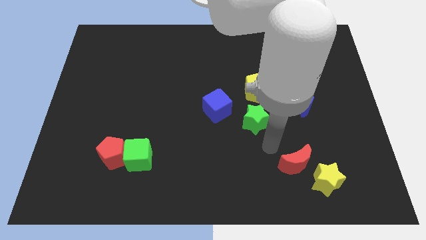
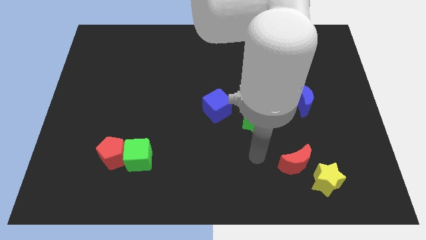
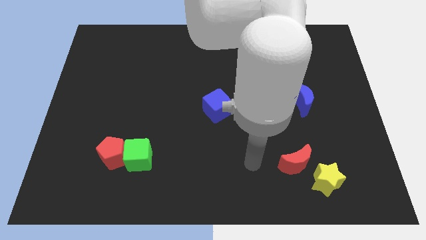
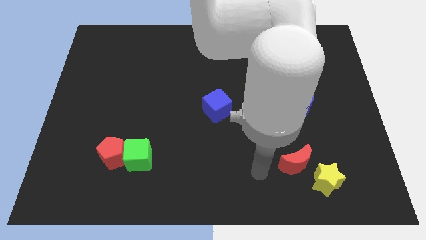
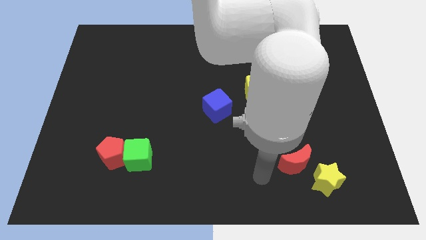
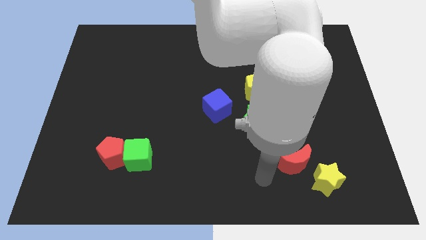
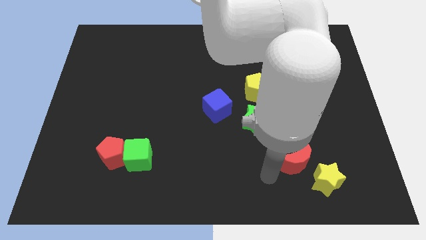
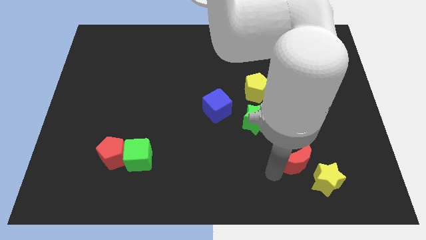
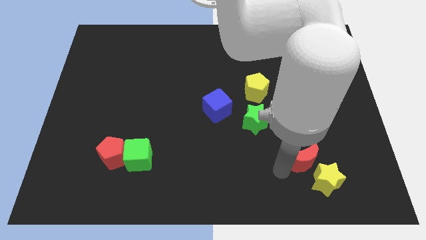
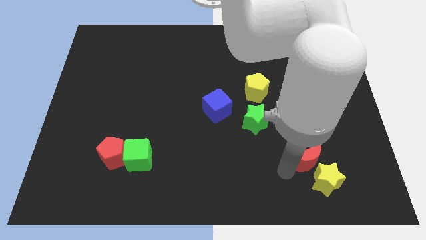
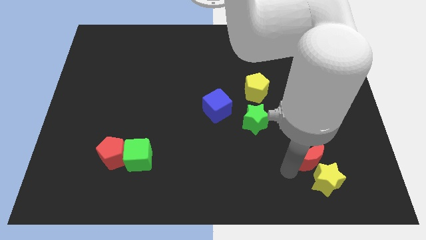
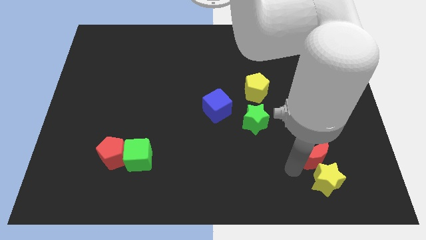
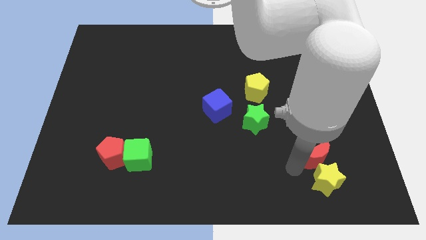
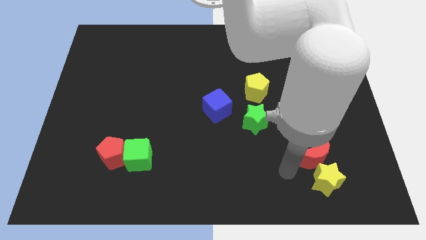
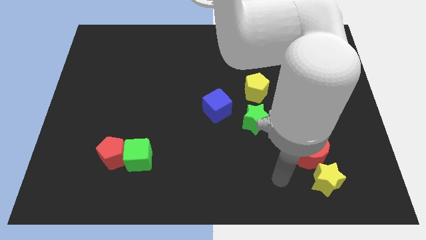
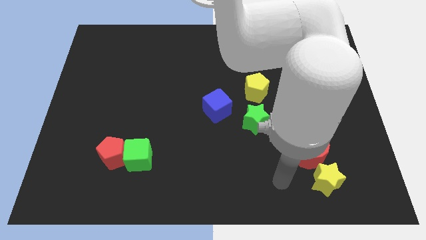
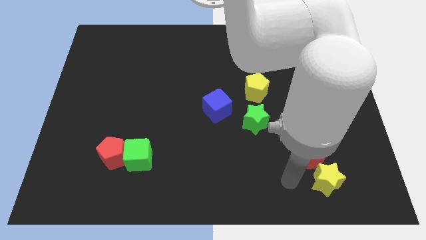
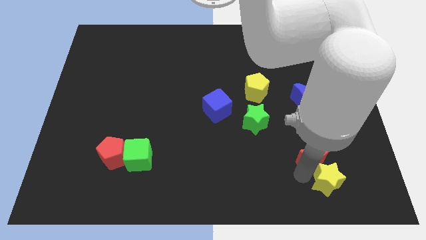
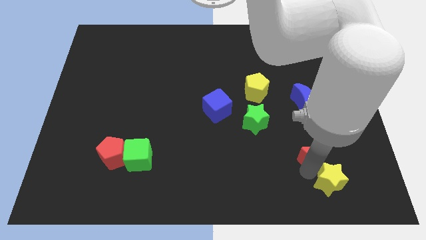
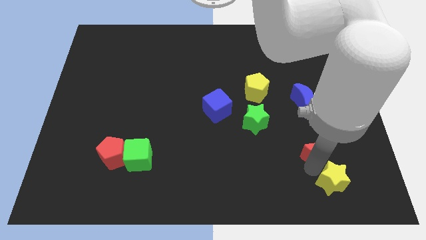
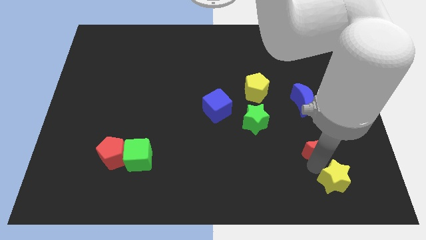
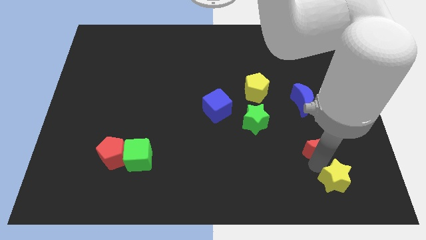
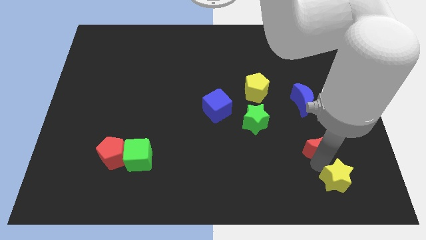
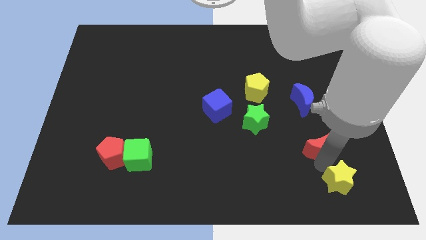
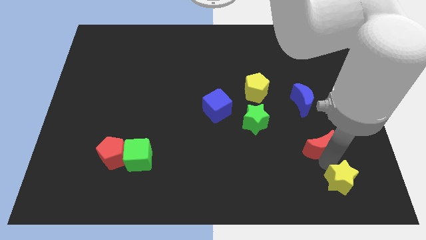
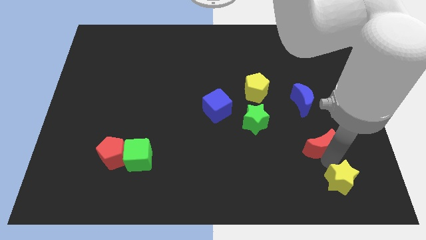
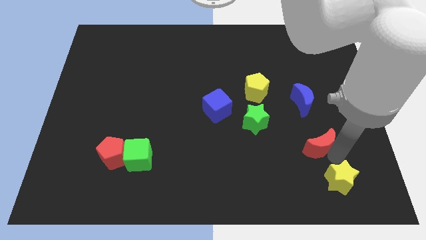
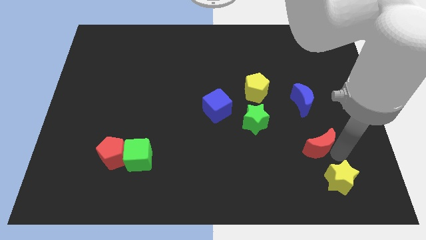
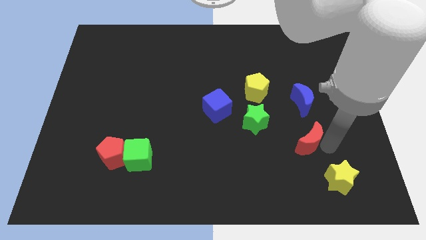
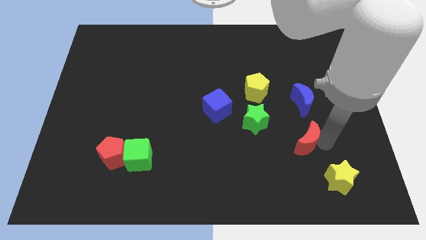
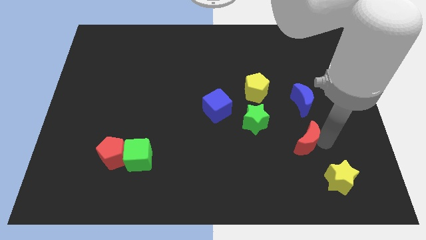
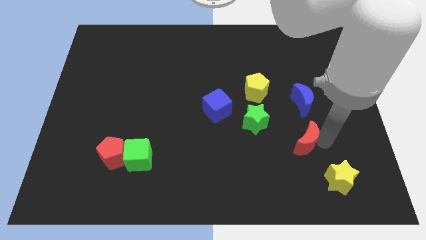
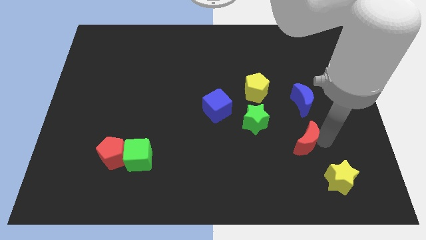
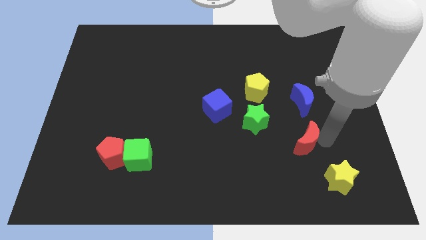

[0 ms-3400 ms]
separate the red moon from yellow star

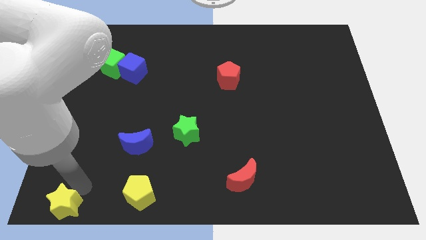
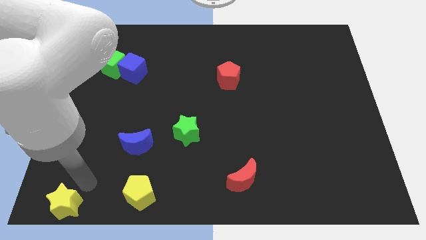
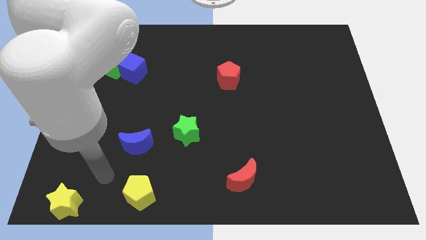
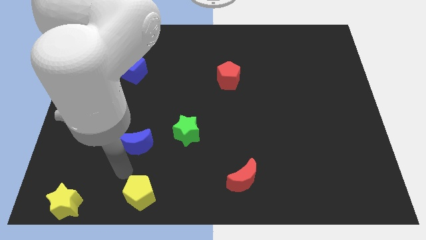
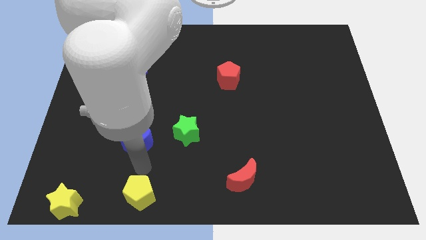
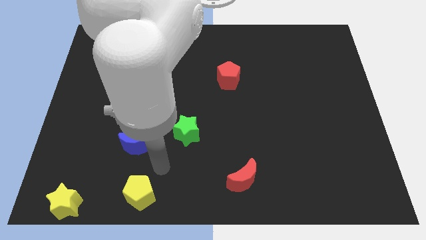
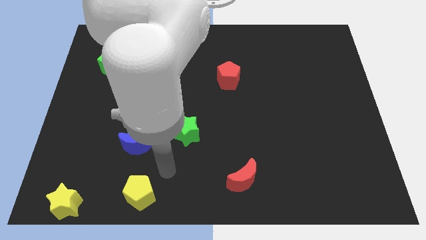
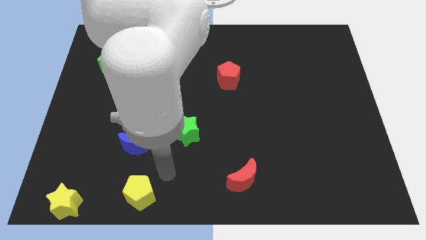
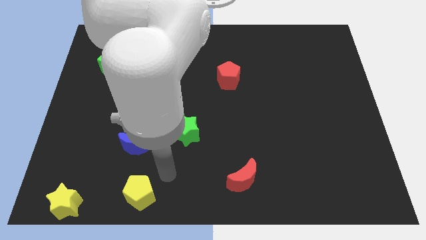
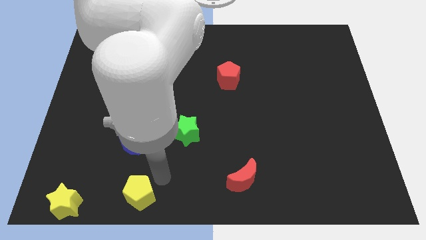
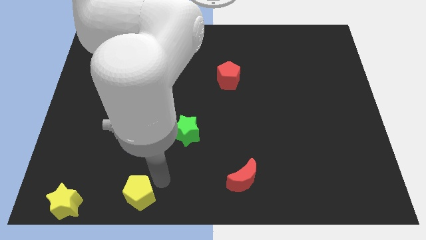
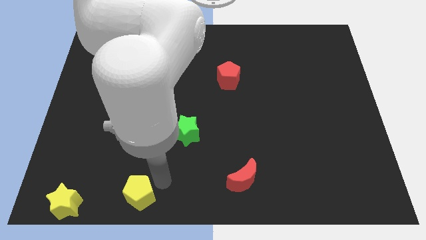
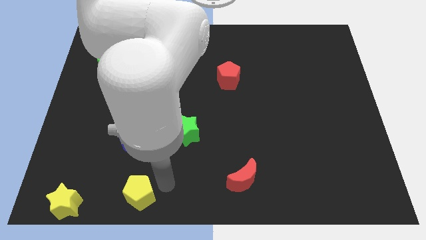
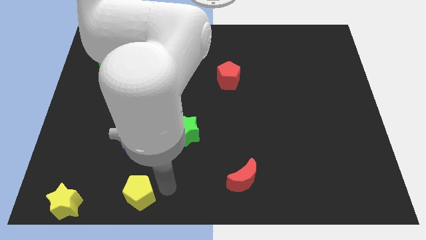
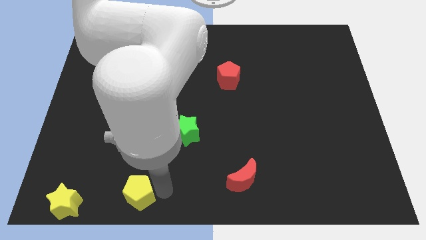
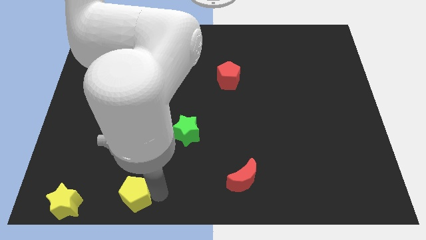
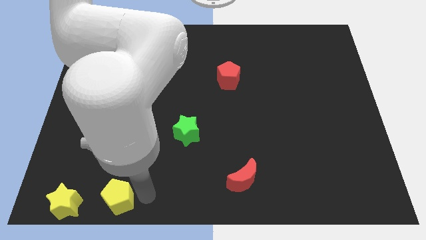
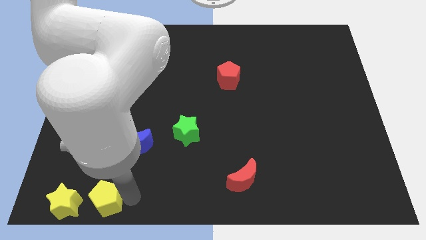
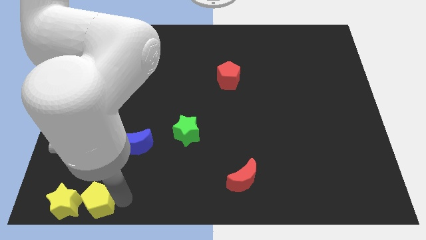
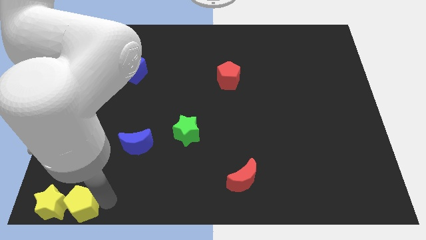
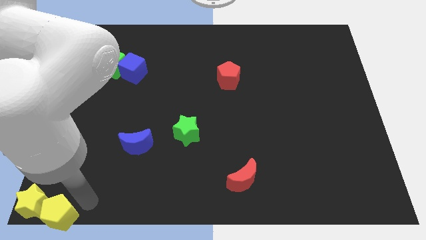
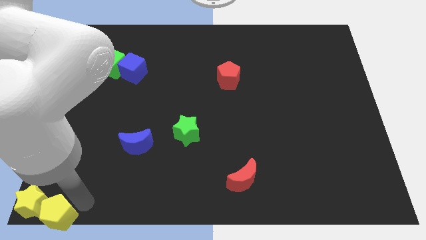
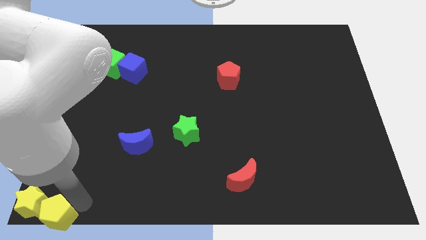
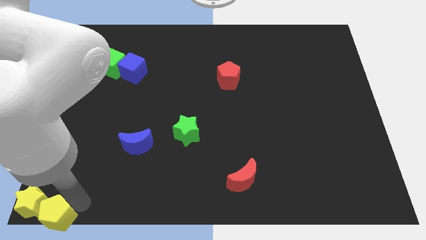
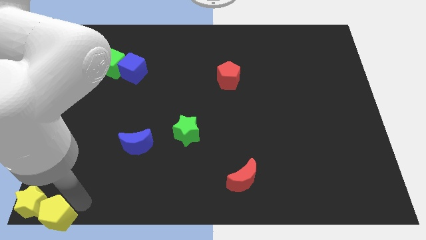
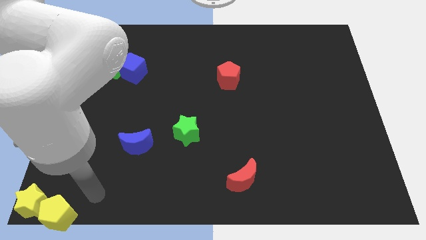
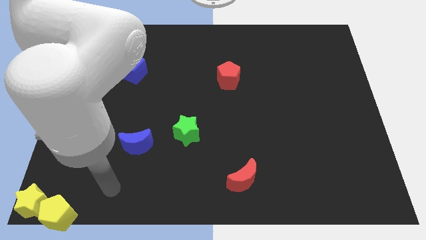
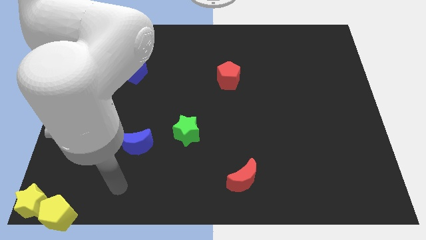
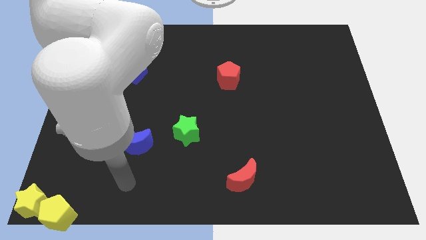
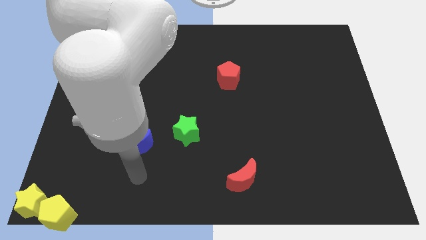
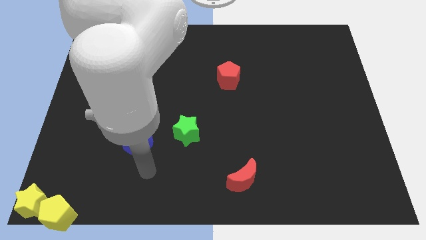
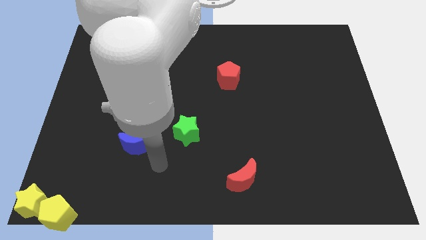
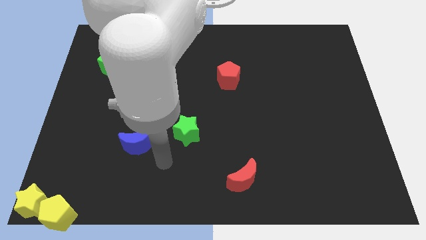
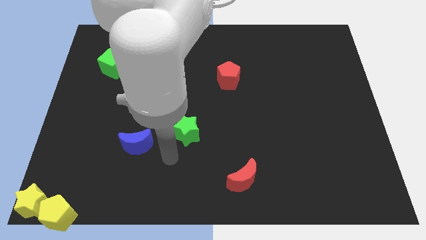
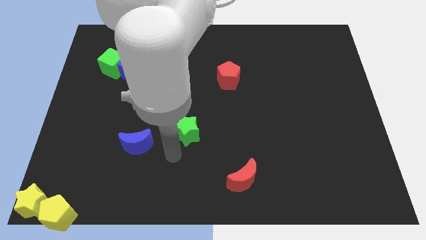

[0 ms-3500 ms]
move the yellow pentagon into the yellow star

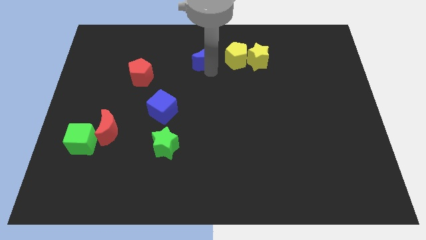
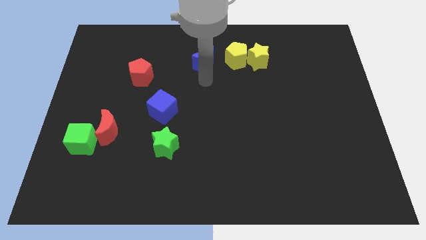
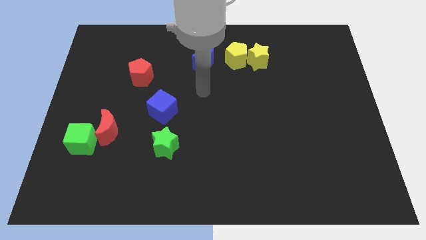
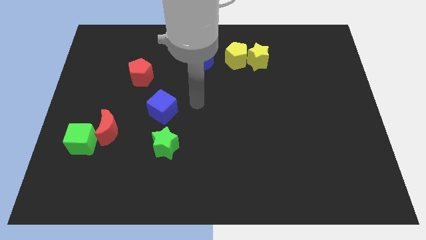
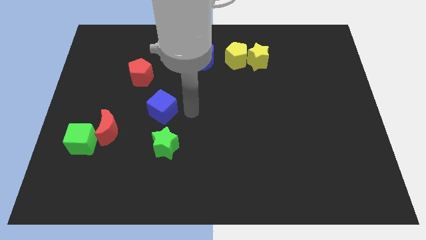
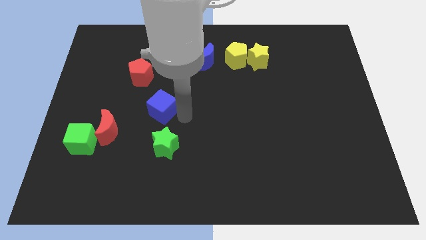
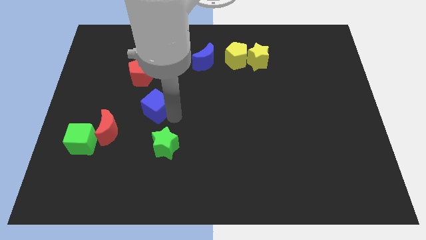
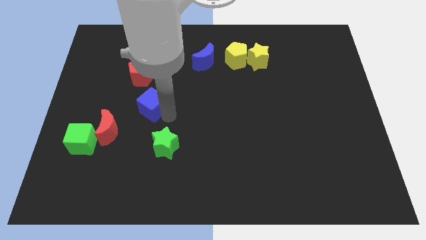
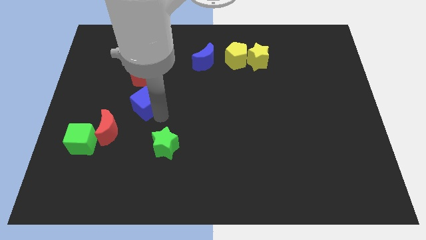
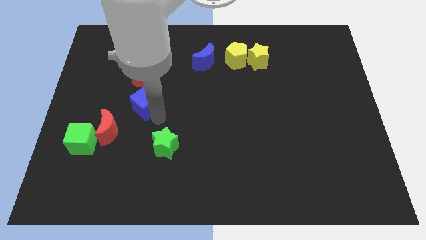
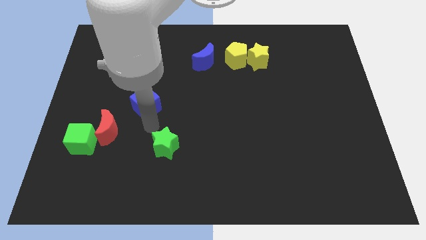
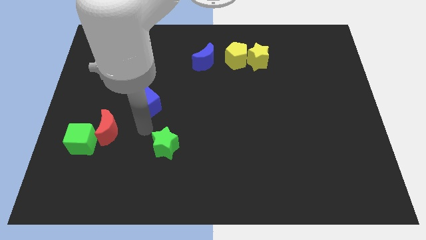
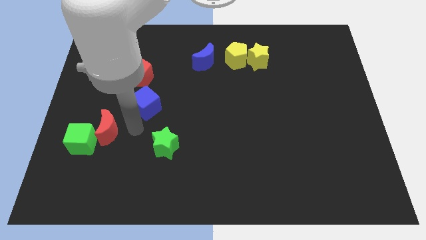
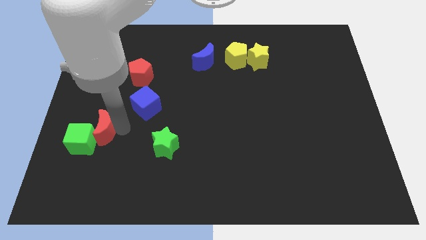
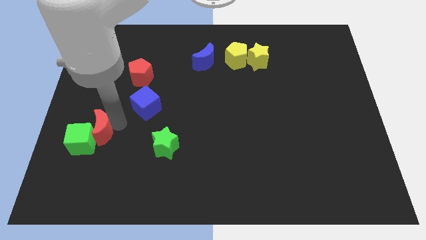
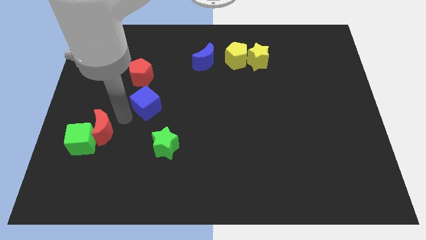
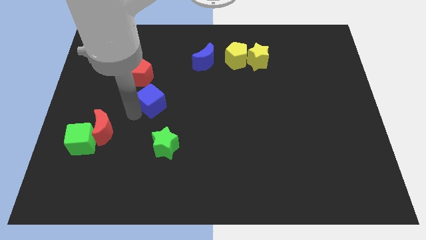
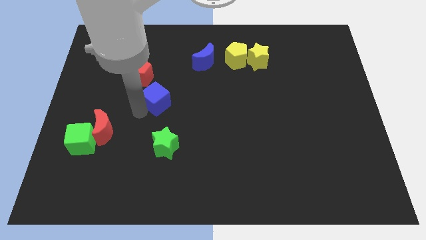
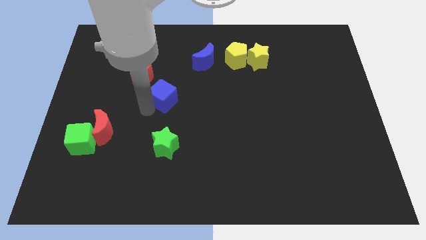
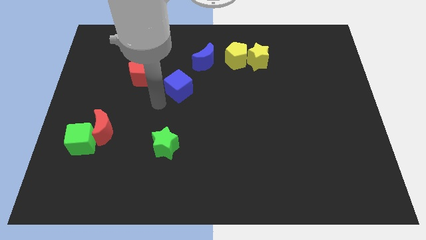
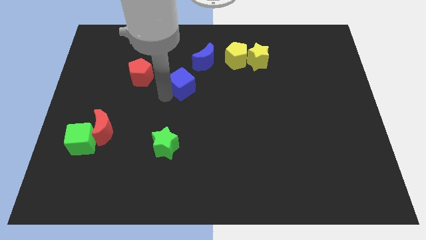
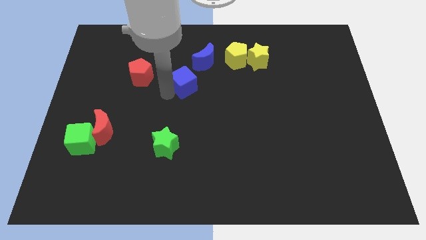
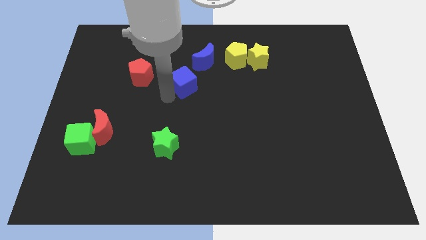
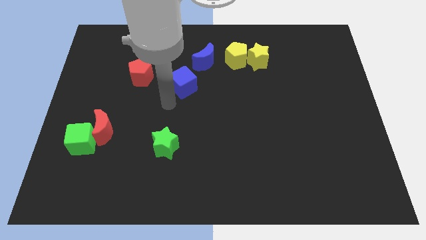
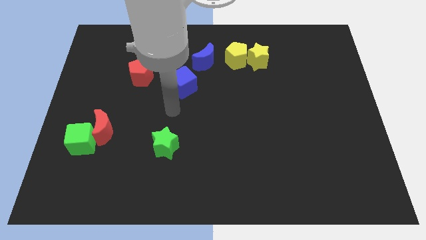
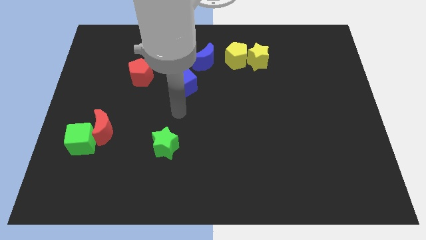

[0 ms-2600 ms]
push the blue cube to the right side of the board
